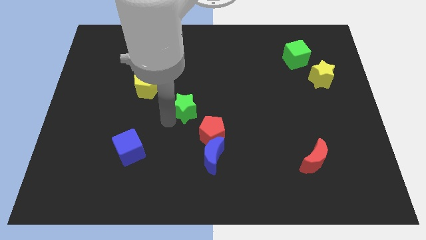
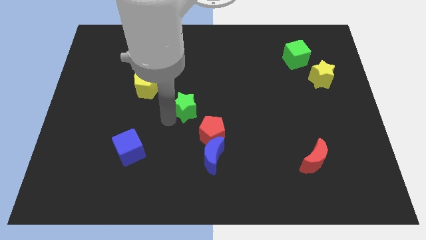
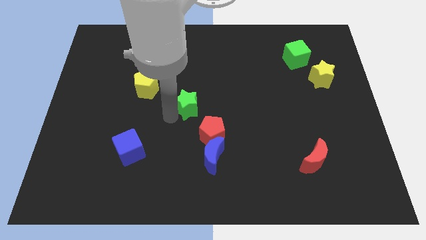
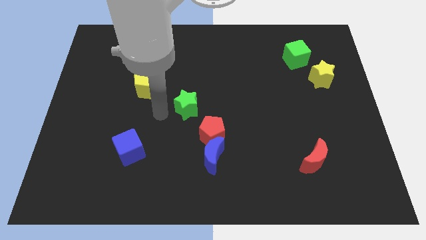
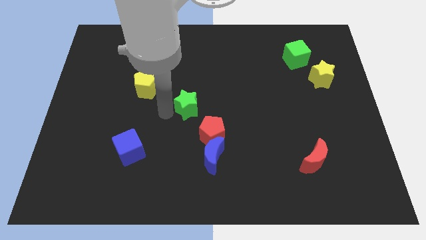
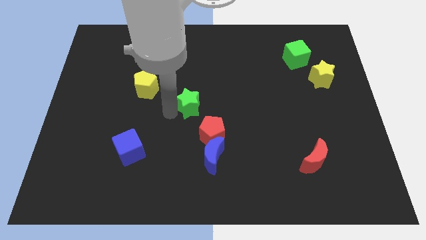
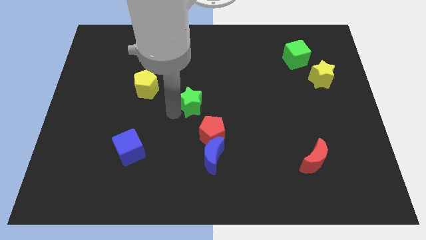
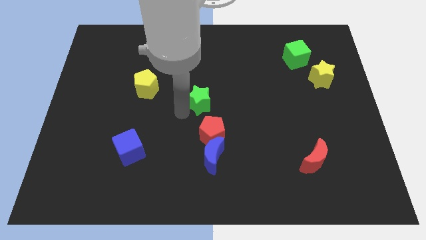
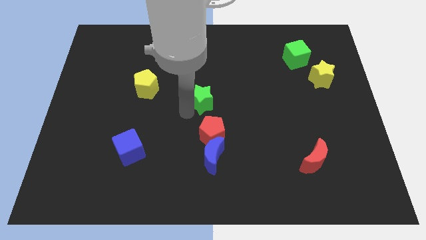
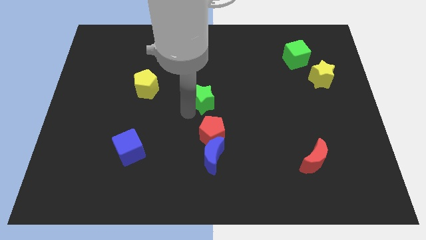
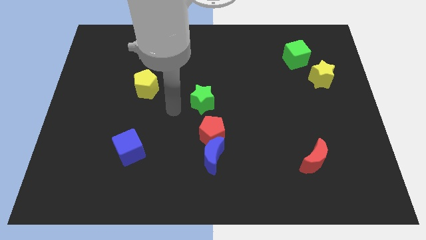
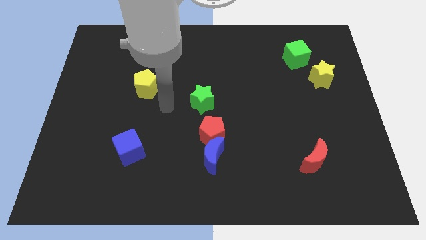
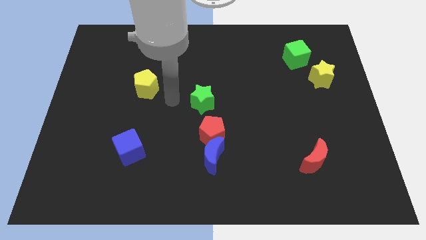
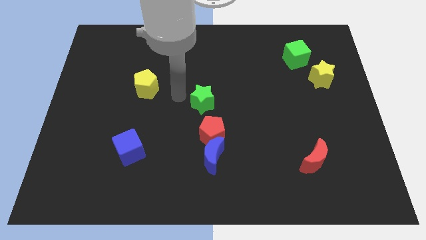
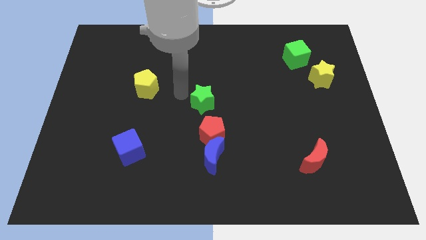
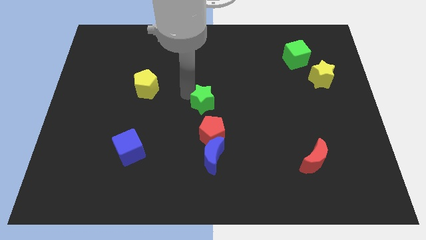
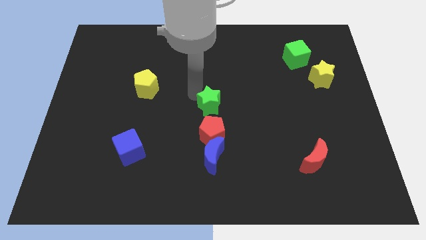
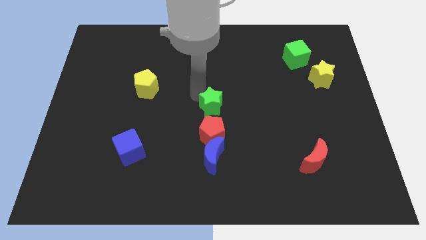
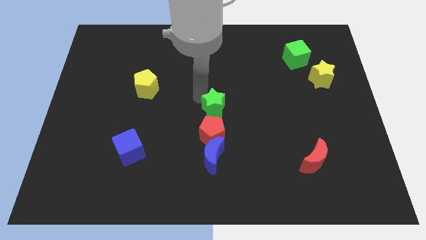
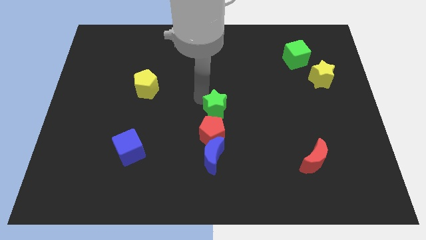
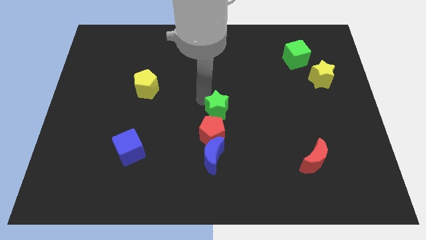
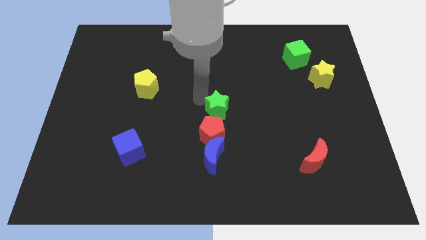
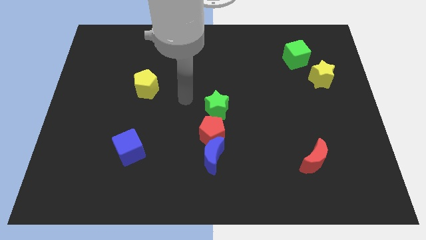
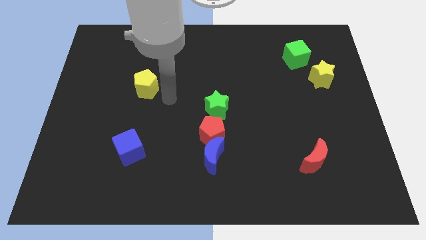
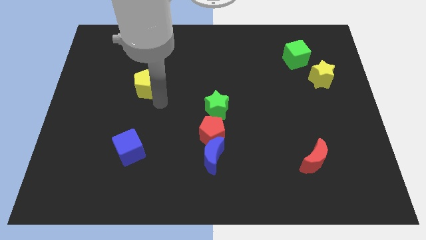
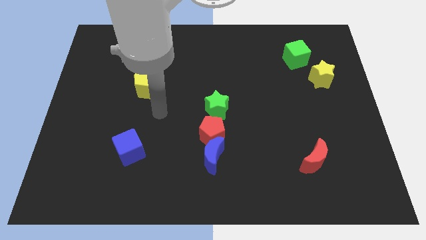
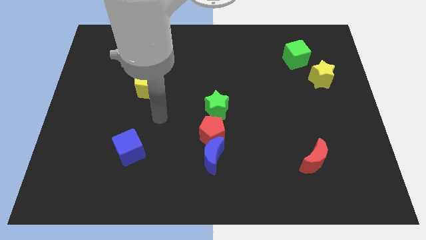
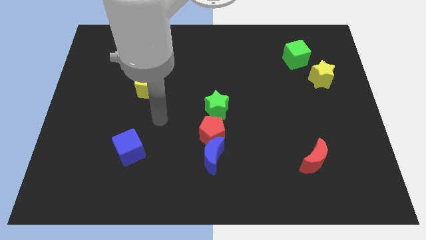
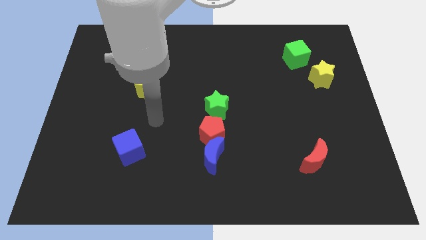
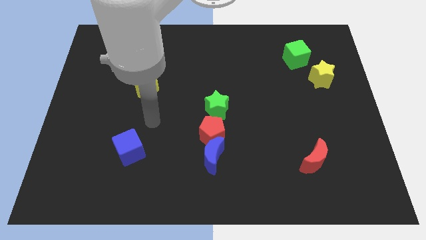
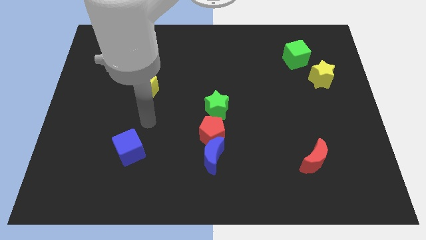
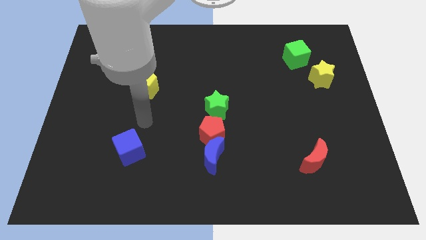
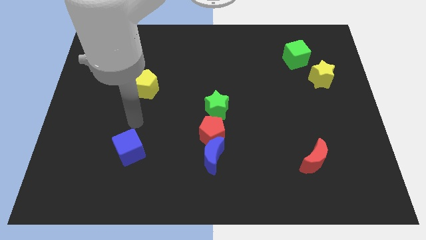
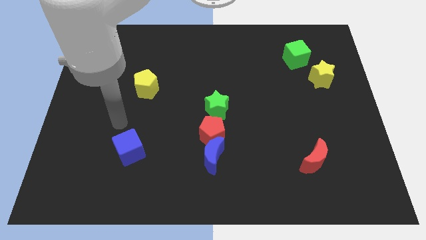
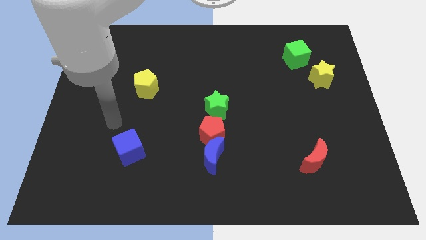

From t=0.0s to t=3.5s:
separate green star from yellow pentagon

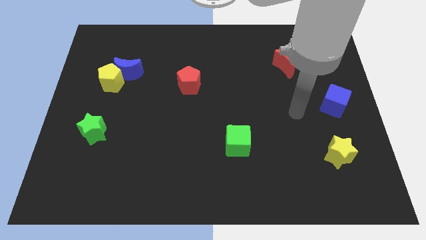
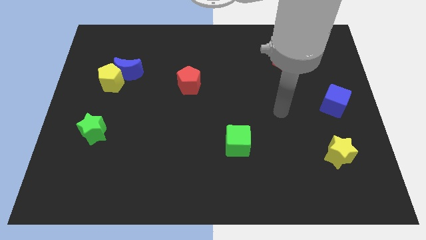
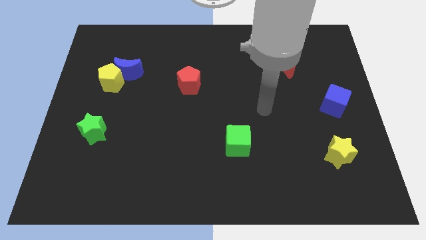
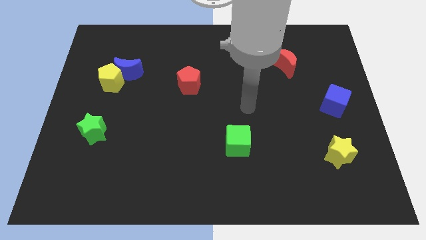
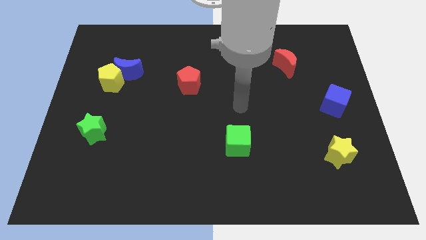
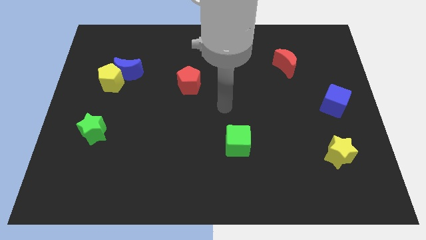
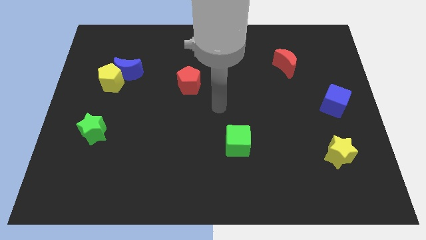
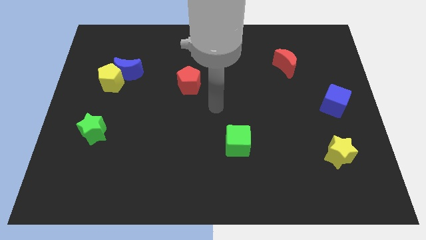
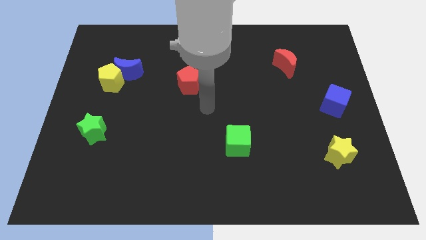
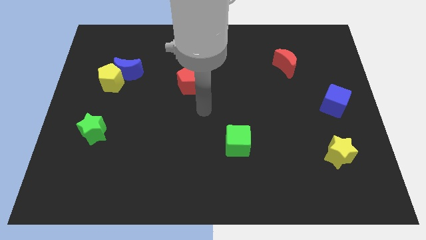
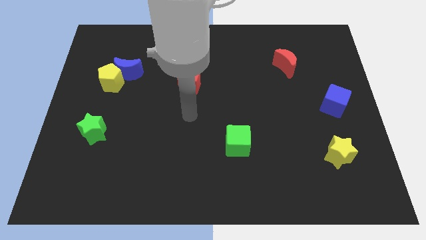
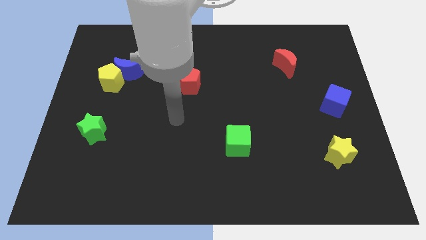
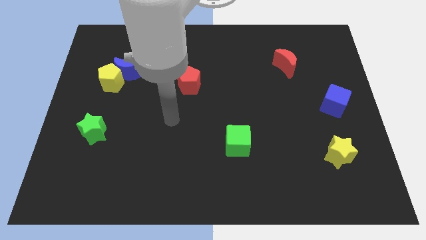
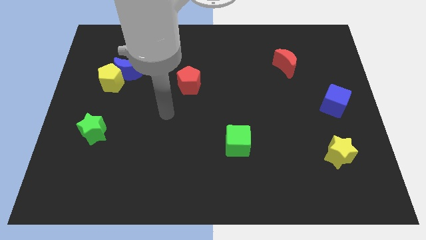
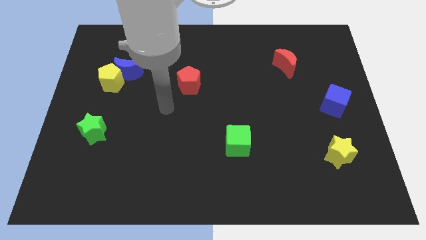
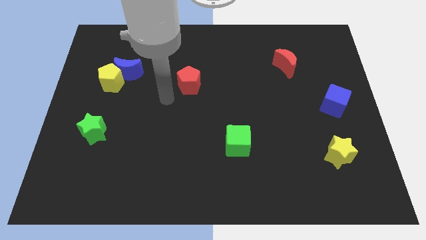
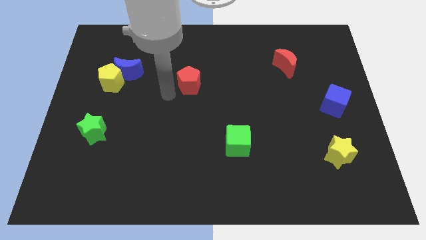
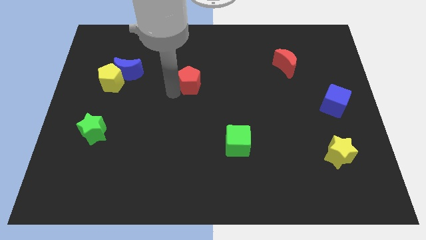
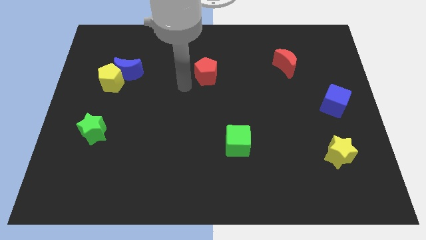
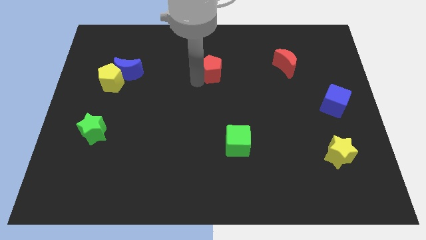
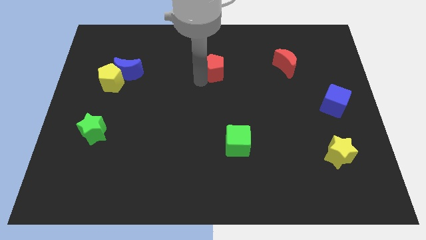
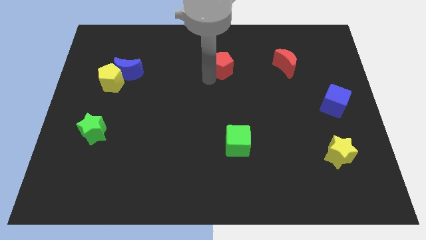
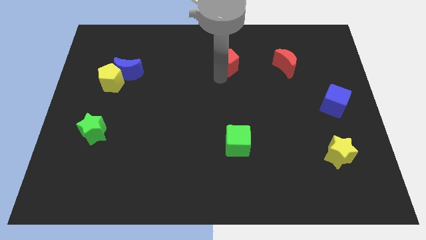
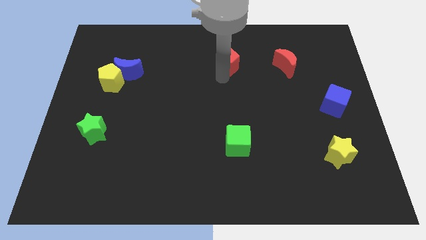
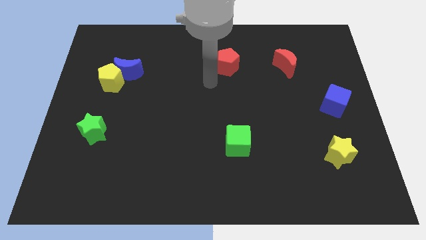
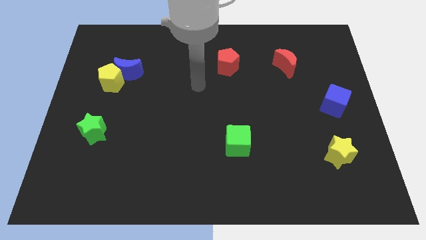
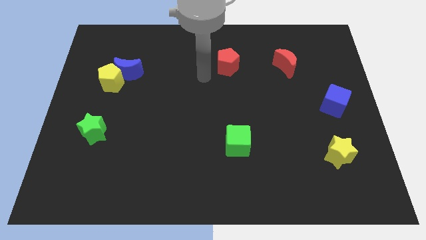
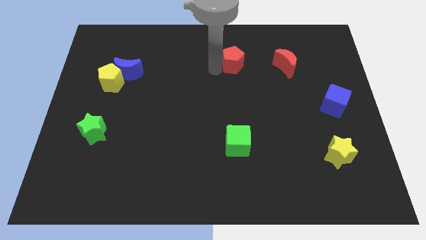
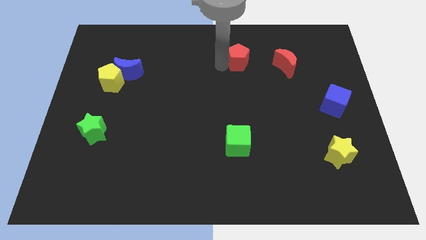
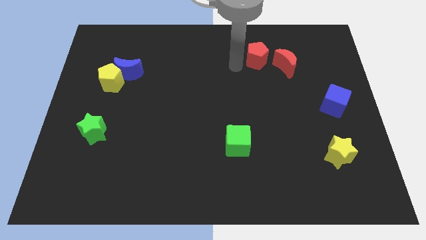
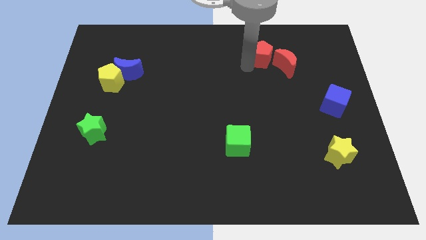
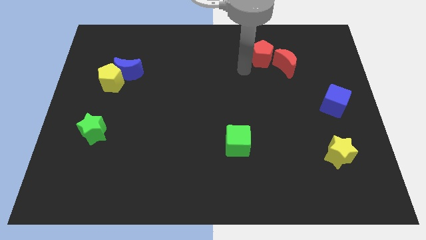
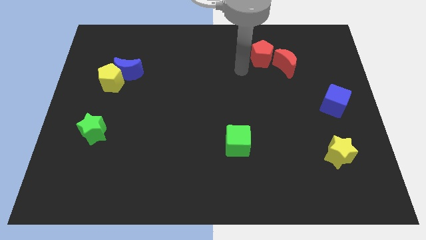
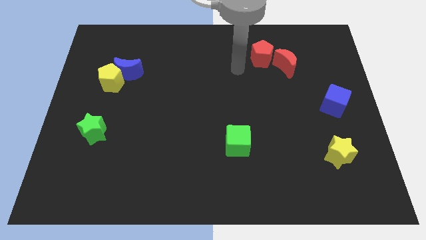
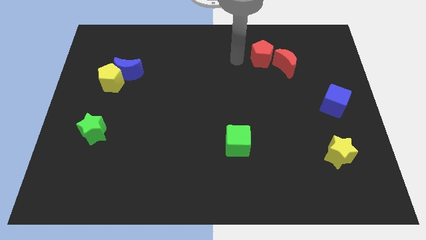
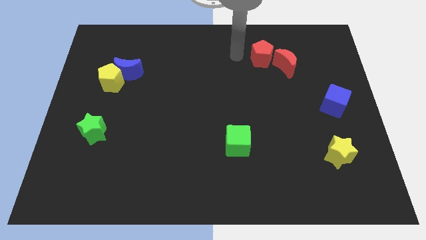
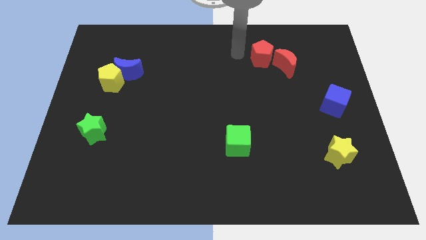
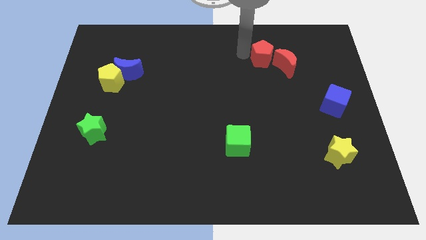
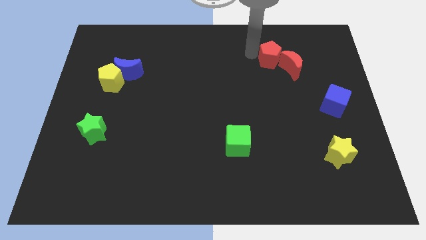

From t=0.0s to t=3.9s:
move the red pentagon left to the red crescent

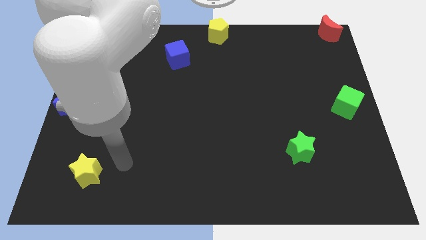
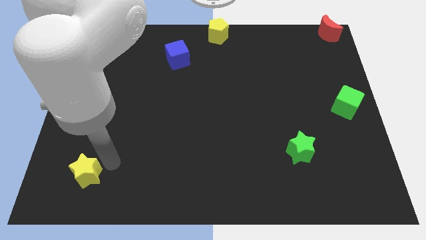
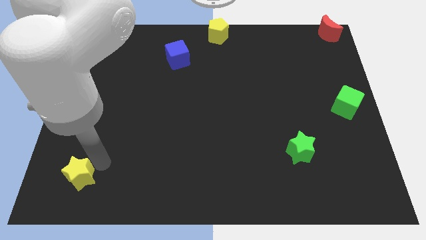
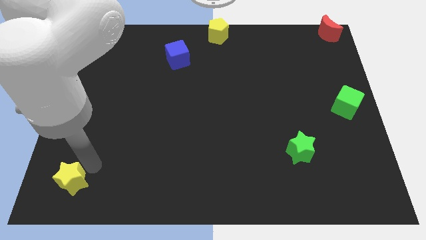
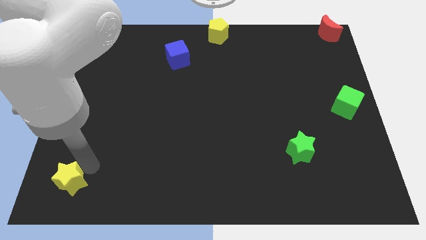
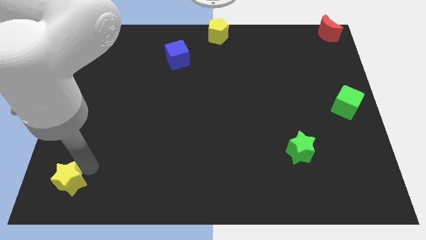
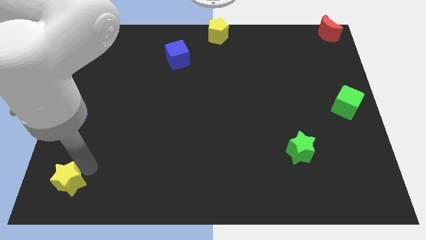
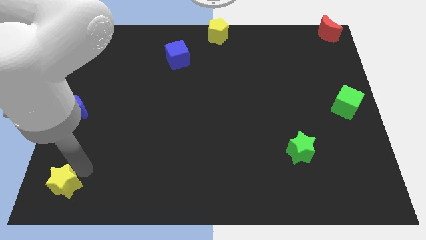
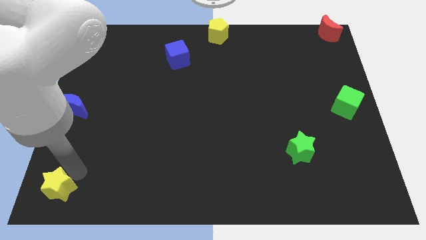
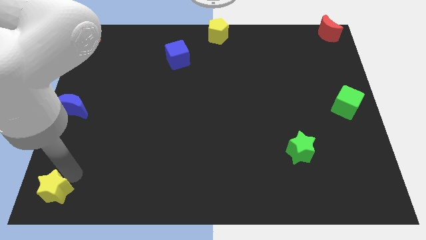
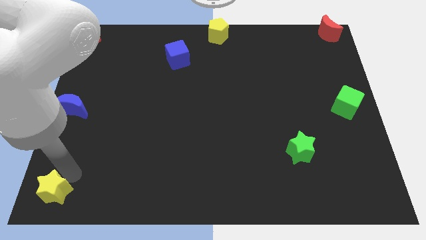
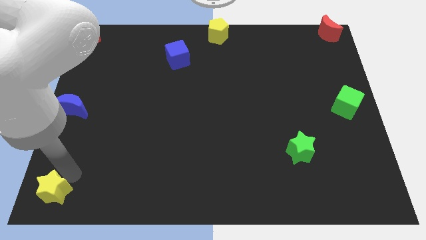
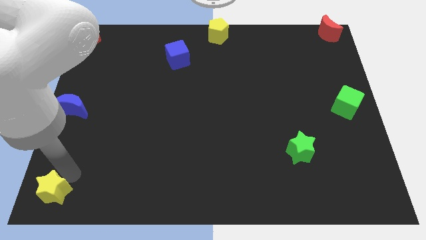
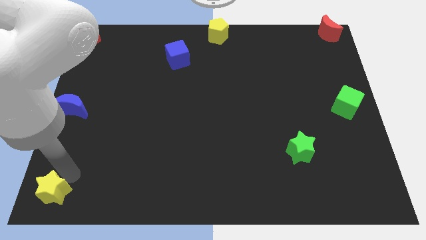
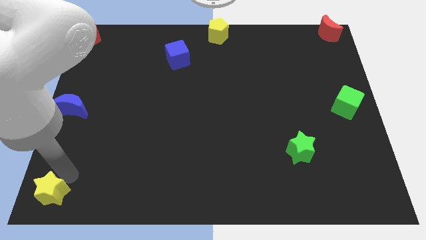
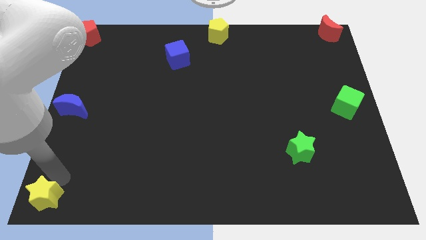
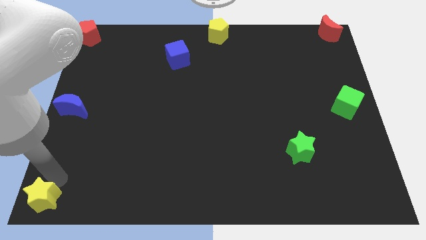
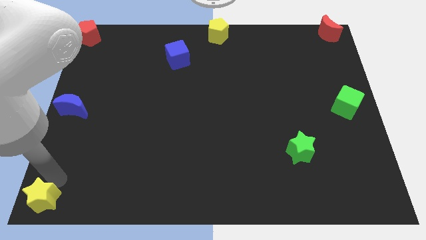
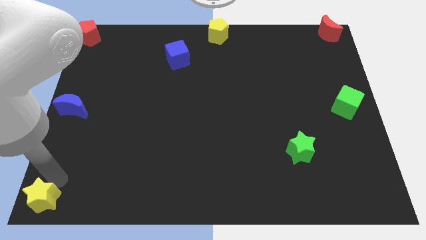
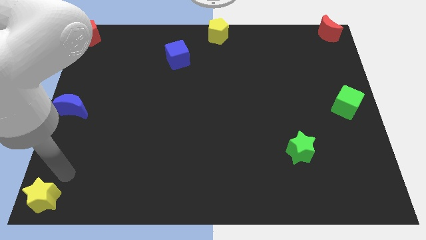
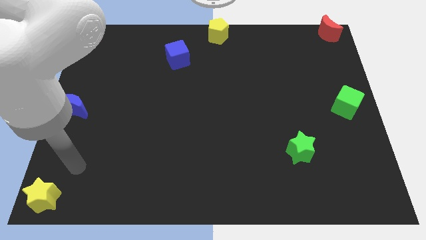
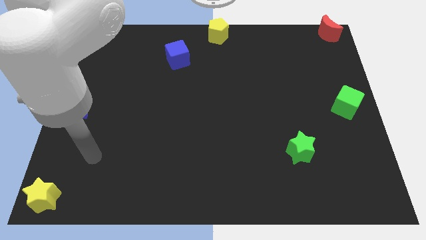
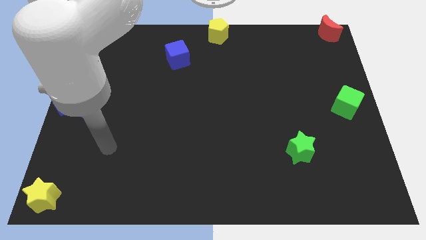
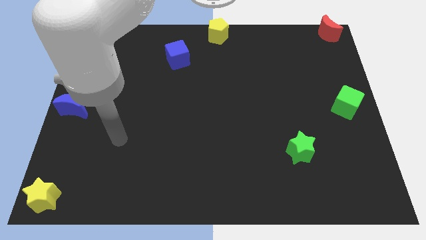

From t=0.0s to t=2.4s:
push the yellow star towards the left bottom of the board
